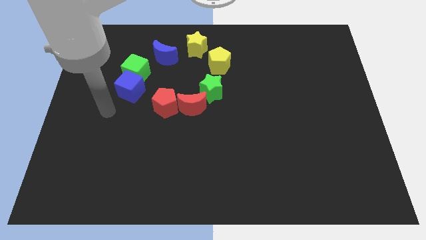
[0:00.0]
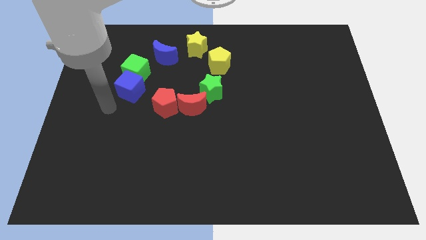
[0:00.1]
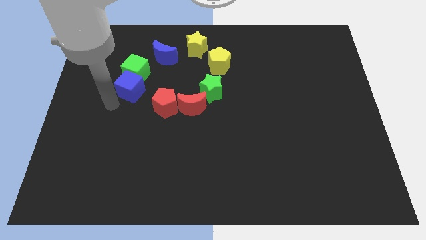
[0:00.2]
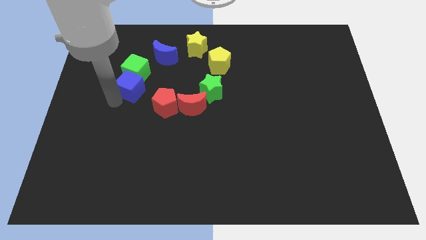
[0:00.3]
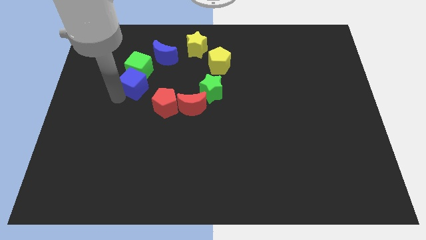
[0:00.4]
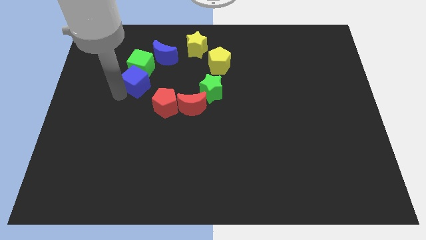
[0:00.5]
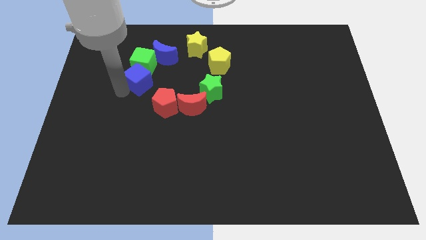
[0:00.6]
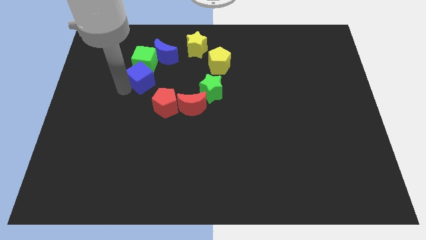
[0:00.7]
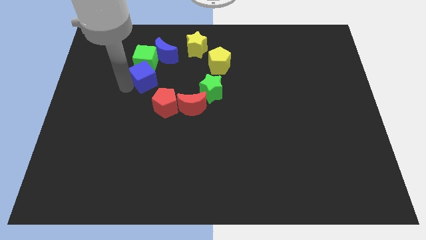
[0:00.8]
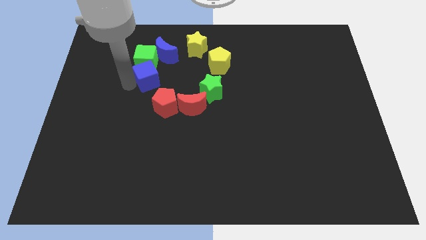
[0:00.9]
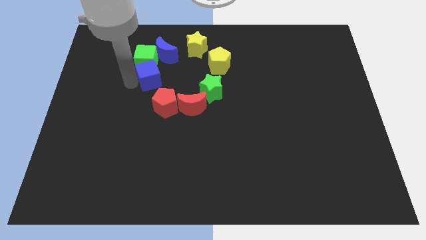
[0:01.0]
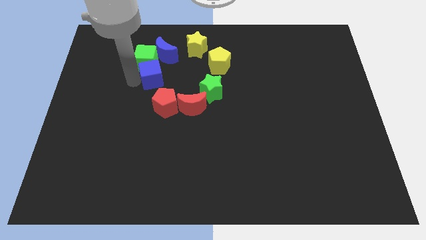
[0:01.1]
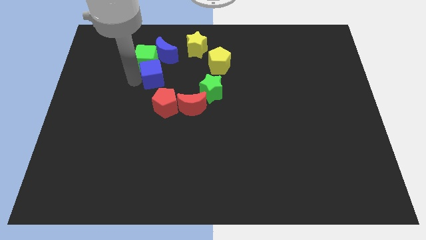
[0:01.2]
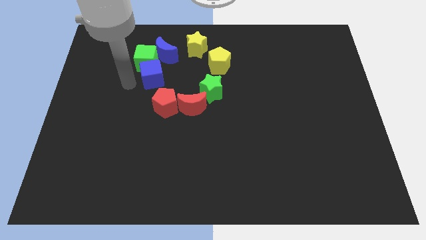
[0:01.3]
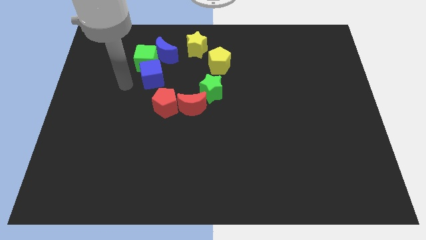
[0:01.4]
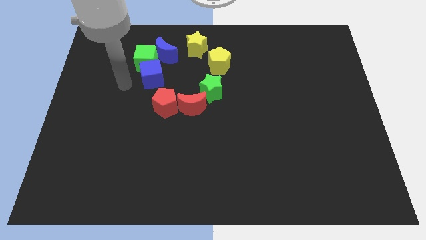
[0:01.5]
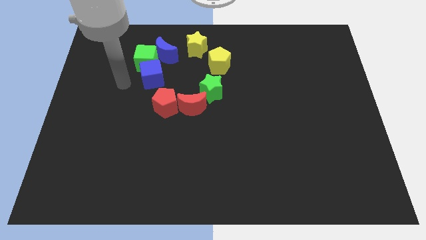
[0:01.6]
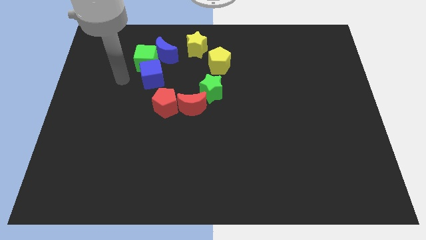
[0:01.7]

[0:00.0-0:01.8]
push the green cube and the blue cube into the blue moon

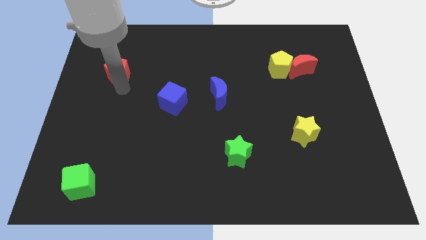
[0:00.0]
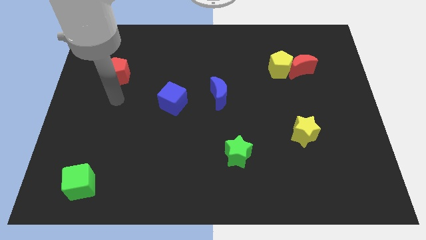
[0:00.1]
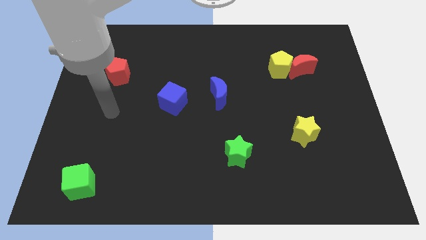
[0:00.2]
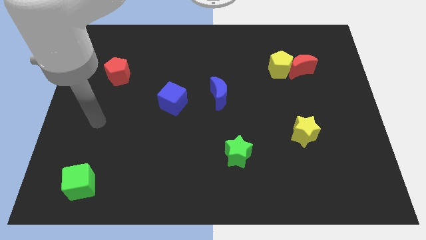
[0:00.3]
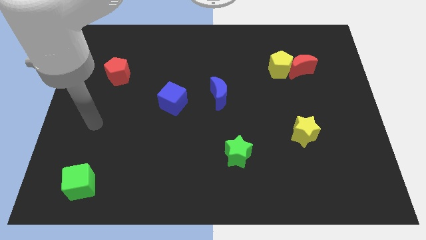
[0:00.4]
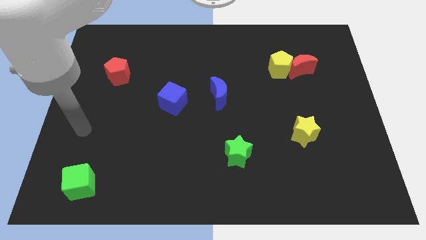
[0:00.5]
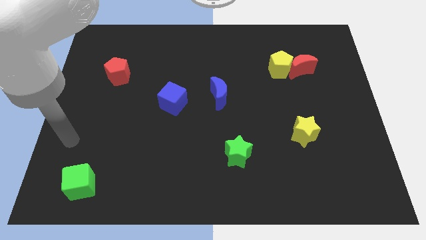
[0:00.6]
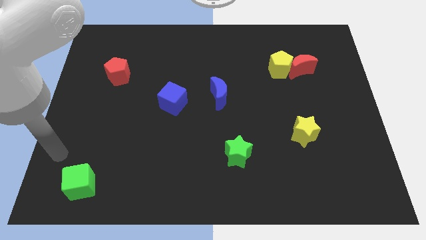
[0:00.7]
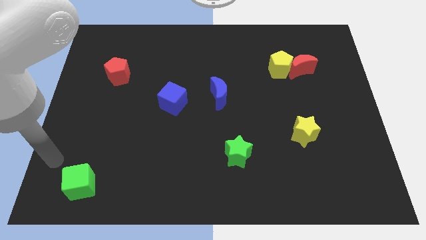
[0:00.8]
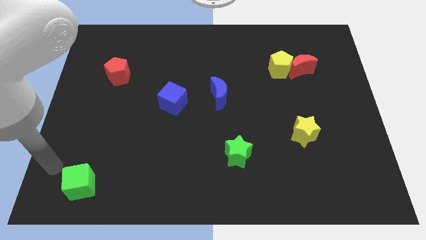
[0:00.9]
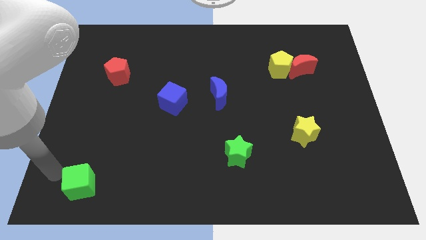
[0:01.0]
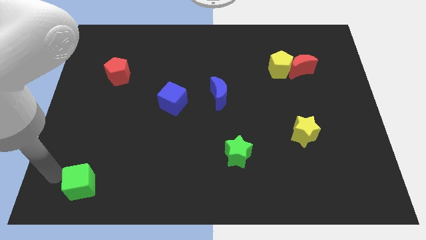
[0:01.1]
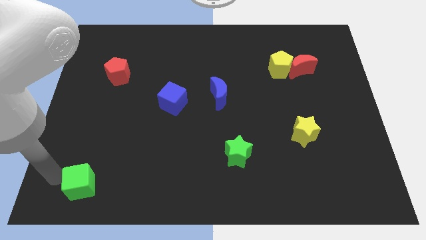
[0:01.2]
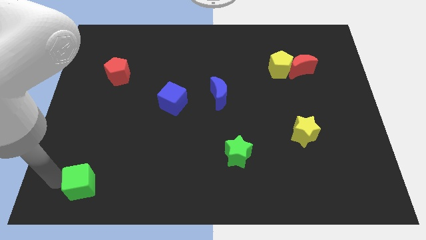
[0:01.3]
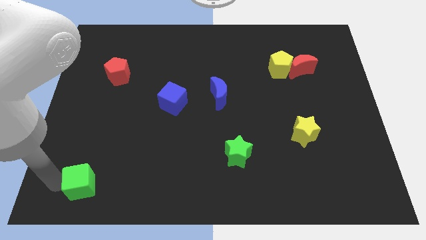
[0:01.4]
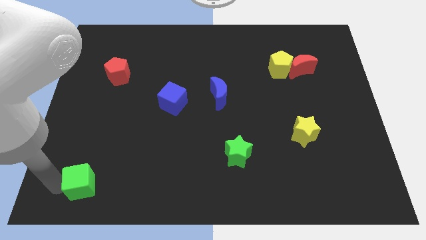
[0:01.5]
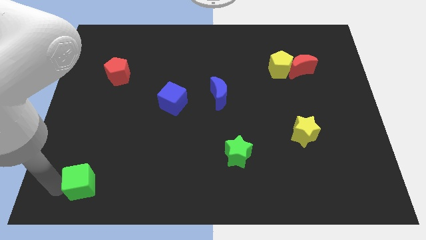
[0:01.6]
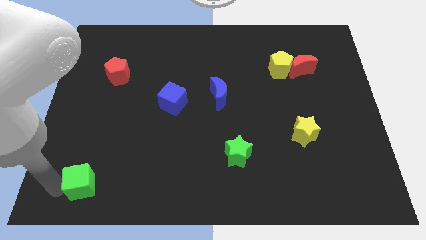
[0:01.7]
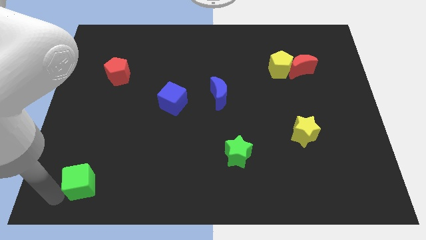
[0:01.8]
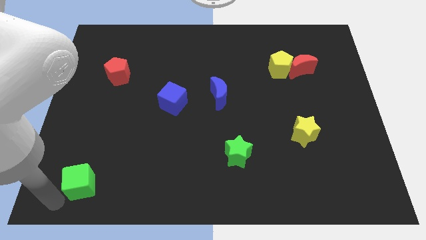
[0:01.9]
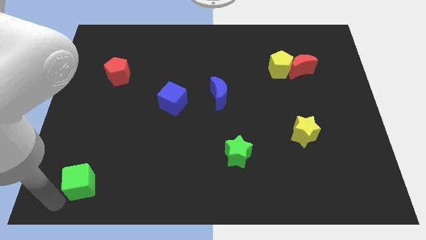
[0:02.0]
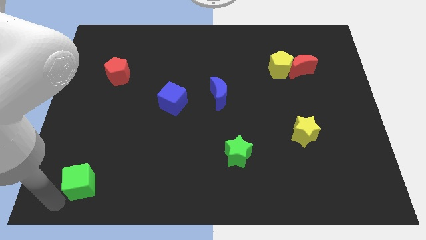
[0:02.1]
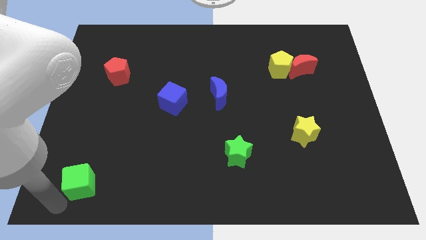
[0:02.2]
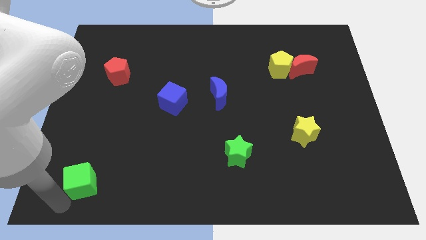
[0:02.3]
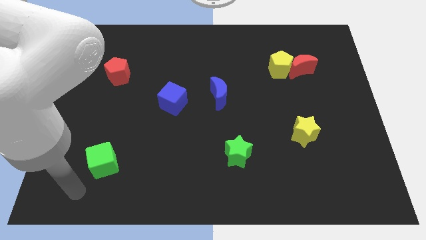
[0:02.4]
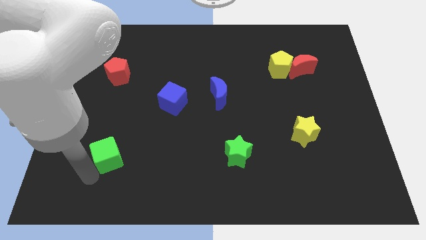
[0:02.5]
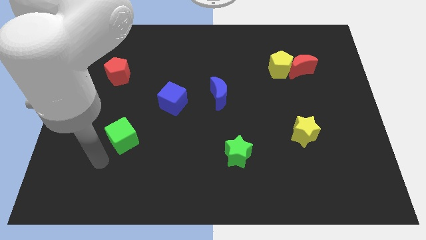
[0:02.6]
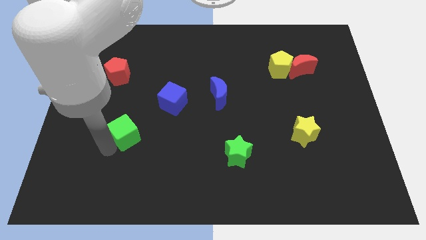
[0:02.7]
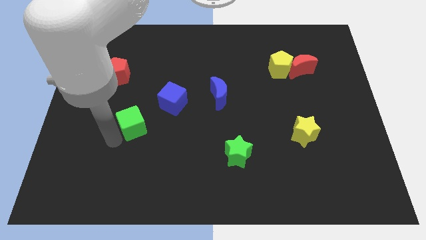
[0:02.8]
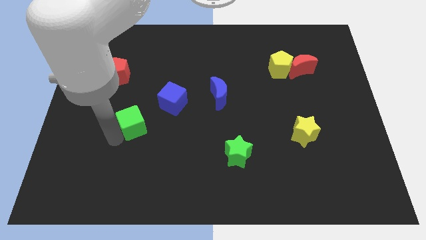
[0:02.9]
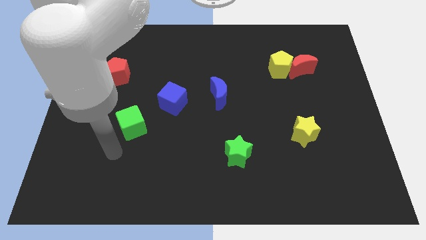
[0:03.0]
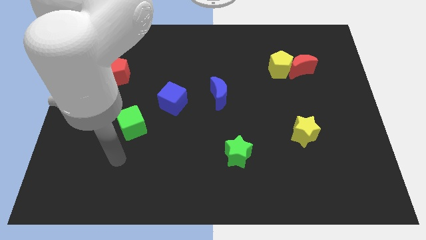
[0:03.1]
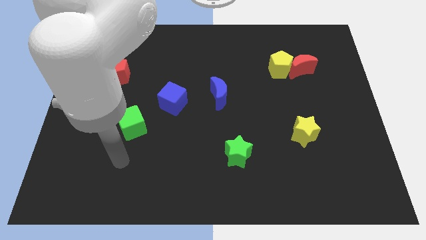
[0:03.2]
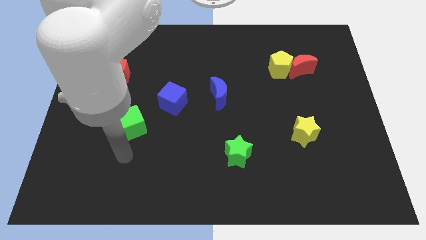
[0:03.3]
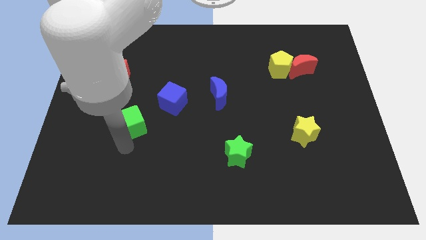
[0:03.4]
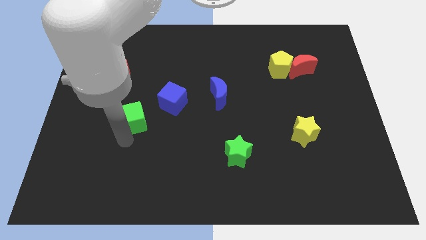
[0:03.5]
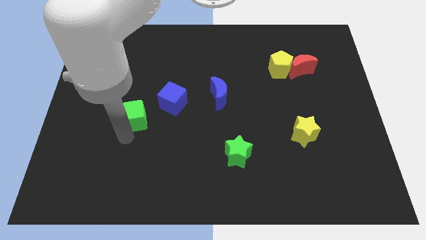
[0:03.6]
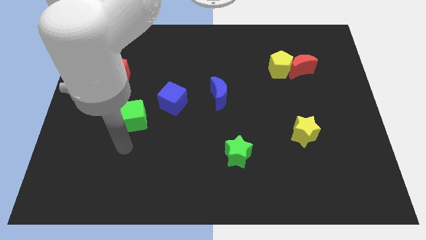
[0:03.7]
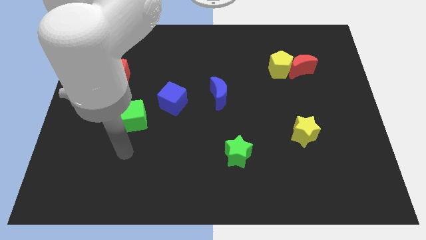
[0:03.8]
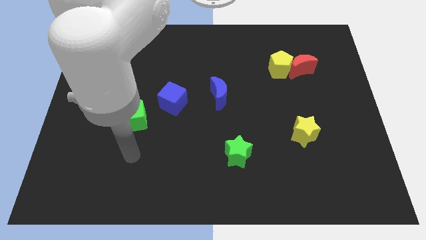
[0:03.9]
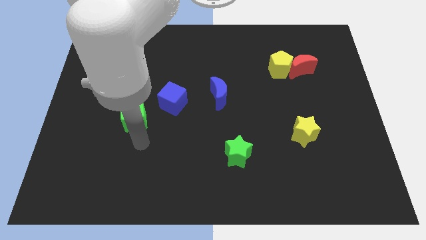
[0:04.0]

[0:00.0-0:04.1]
move the green cube to the bottom left of the blue cube

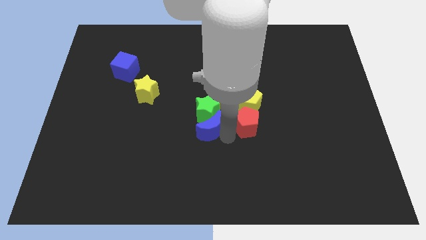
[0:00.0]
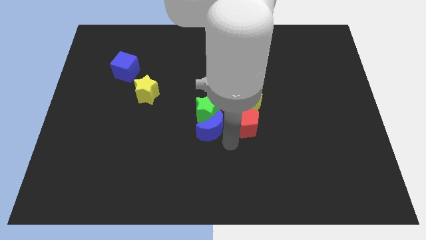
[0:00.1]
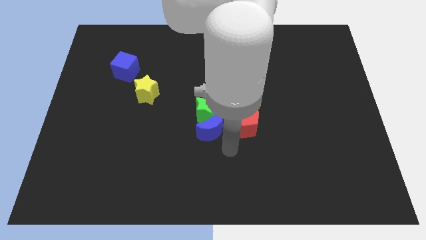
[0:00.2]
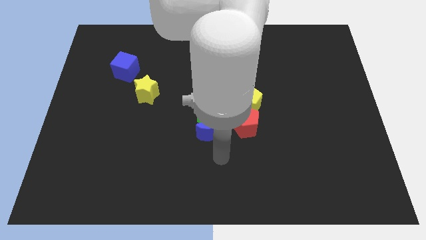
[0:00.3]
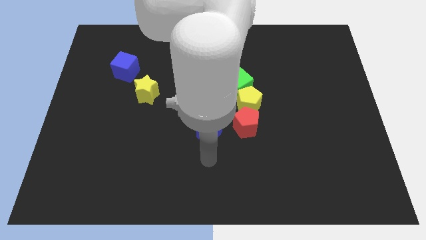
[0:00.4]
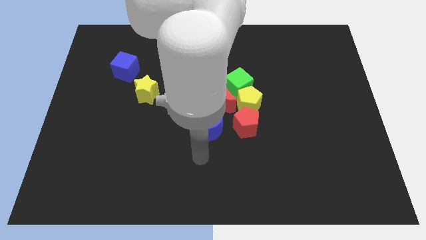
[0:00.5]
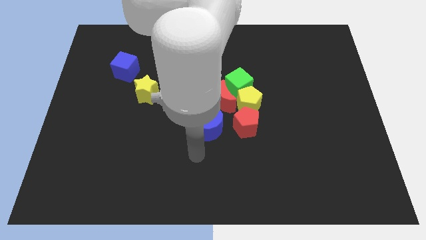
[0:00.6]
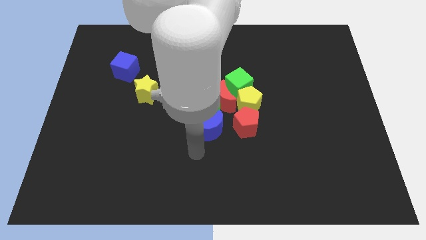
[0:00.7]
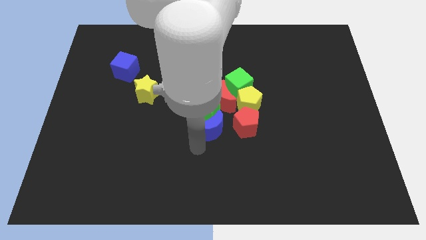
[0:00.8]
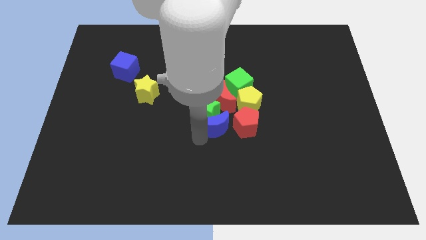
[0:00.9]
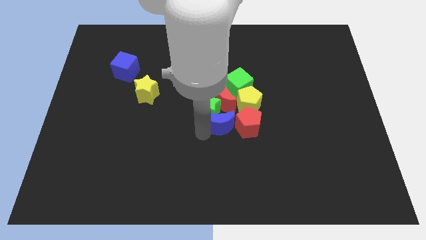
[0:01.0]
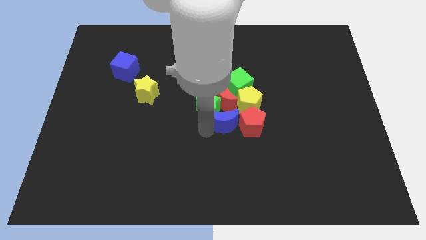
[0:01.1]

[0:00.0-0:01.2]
move the blue crescent to the left side of the red pentagon

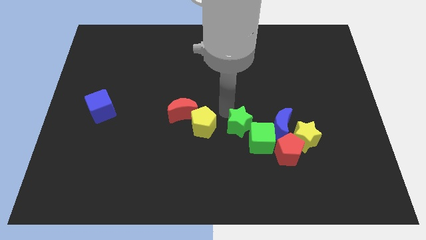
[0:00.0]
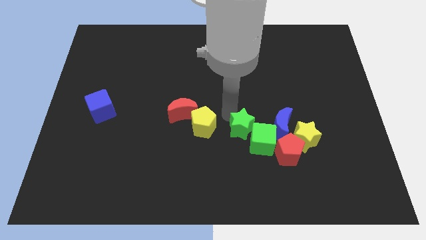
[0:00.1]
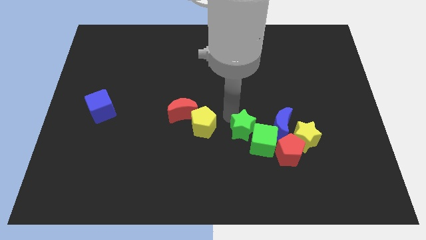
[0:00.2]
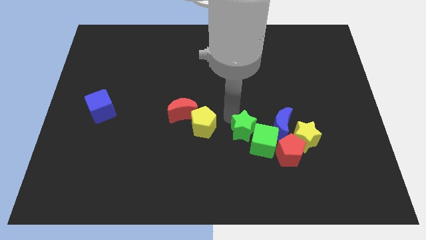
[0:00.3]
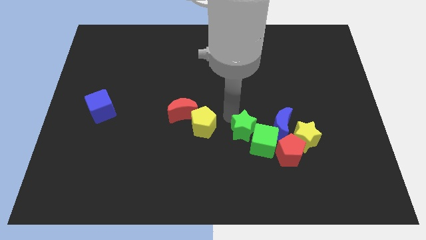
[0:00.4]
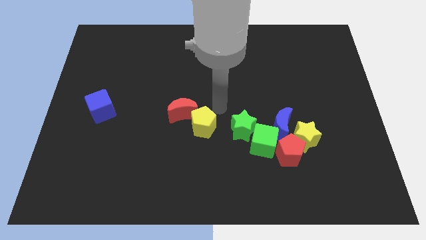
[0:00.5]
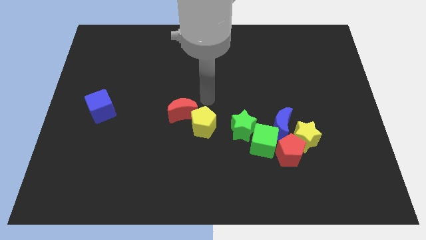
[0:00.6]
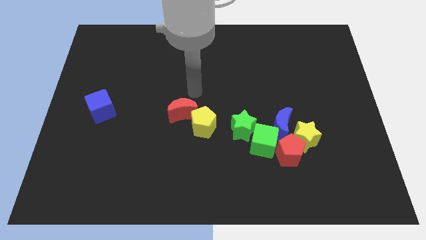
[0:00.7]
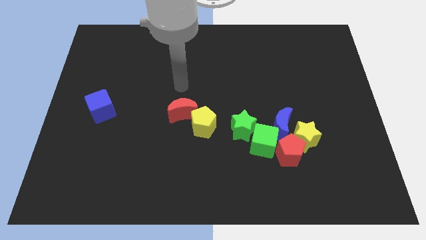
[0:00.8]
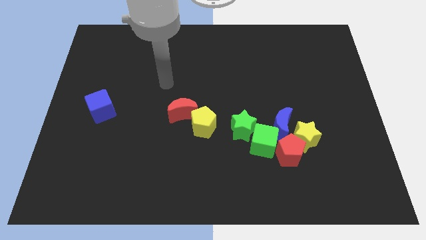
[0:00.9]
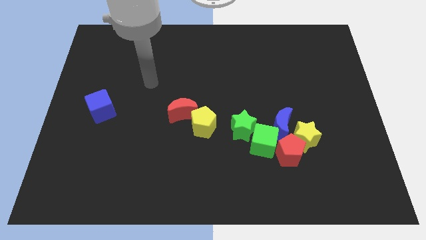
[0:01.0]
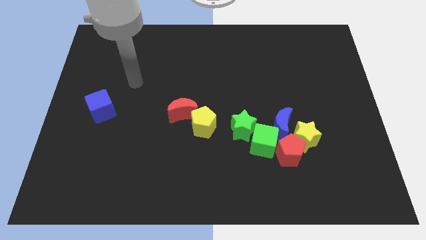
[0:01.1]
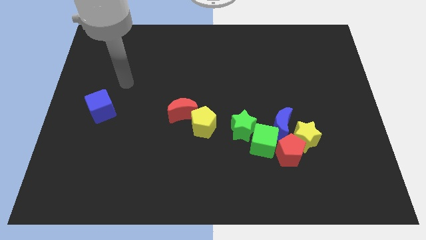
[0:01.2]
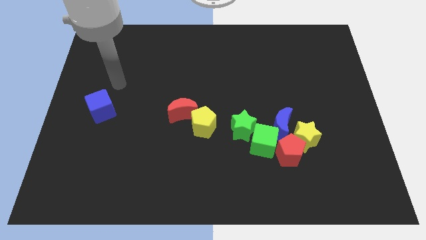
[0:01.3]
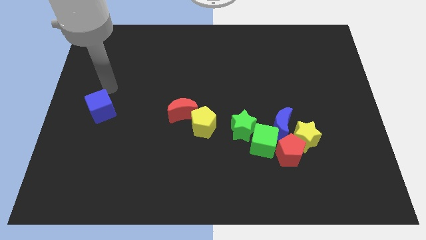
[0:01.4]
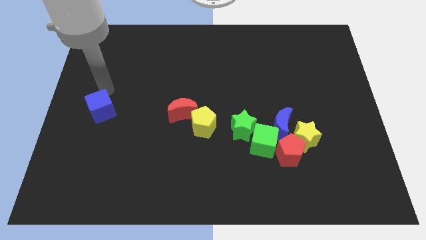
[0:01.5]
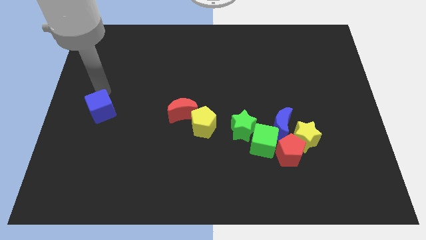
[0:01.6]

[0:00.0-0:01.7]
place the arm towards the top of the blue cube

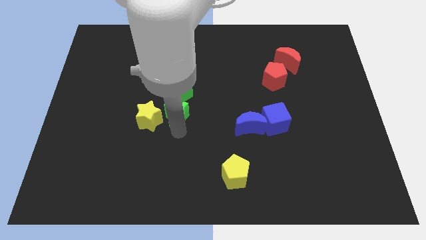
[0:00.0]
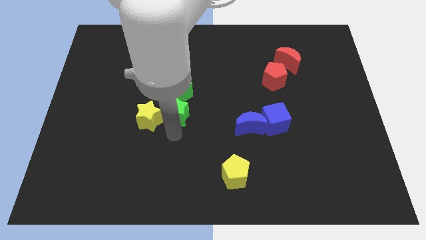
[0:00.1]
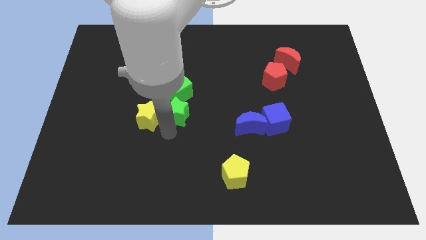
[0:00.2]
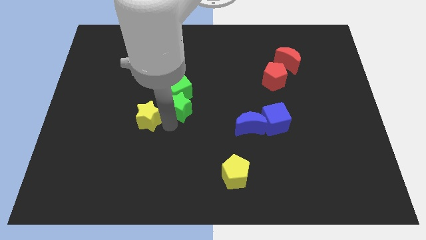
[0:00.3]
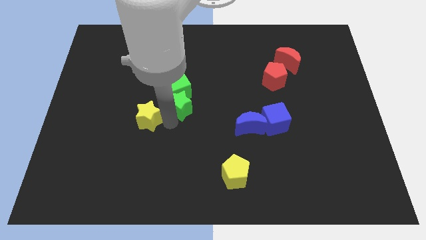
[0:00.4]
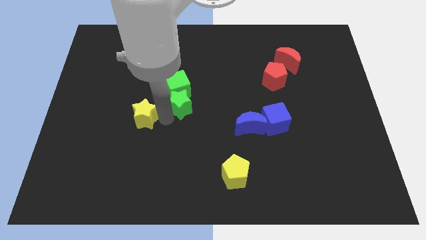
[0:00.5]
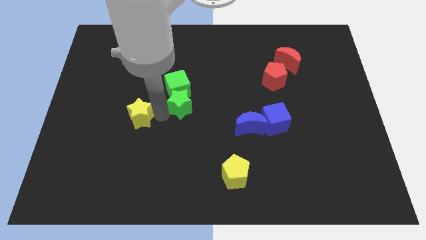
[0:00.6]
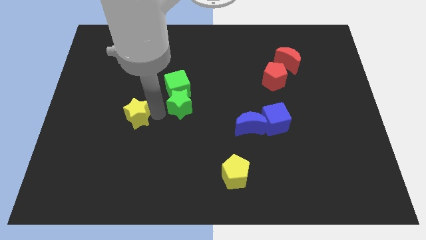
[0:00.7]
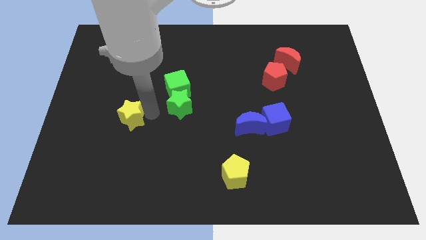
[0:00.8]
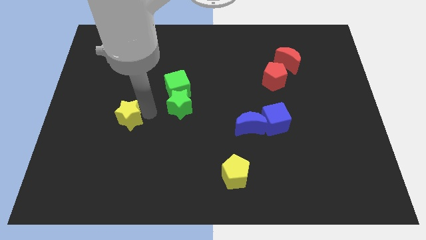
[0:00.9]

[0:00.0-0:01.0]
separate green star and yellow star
